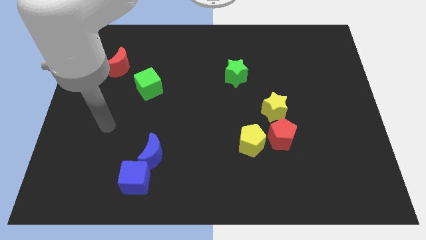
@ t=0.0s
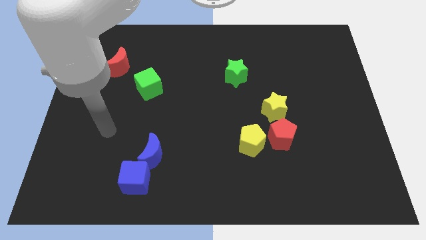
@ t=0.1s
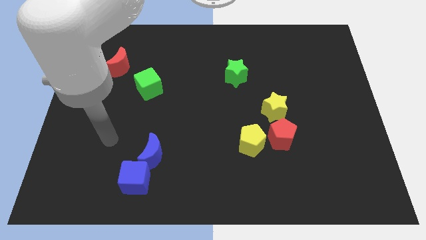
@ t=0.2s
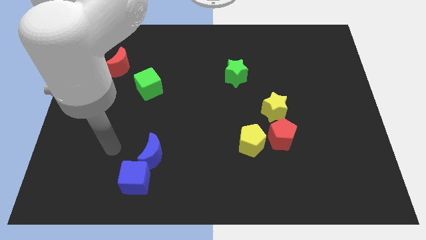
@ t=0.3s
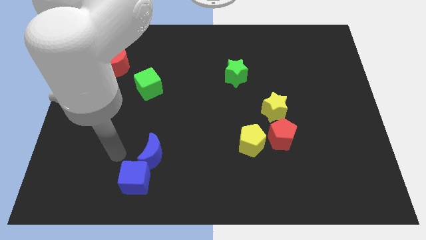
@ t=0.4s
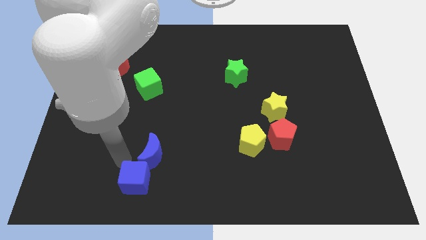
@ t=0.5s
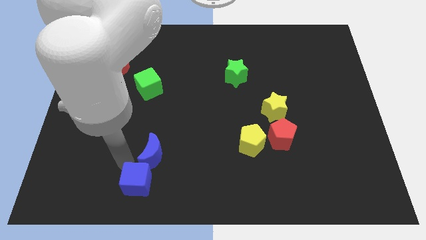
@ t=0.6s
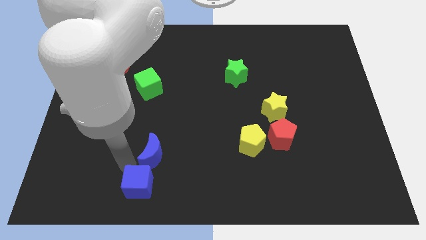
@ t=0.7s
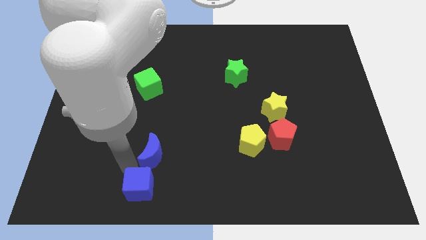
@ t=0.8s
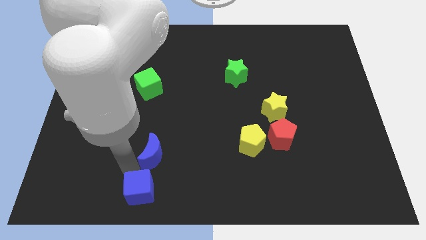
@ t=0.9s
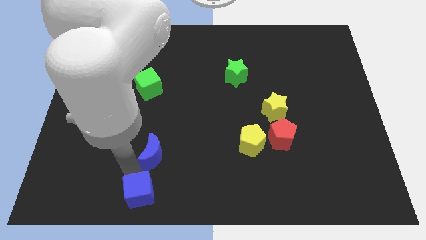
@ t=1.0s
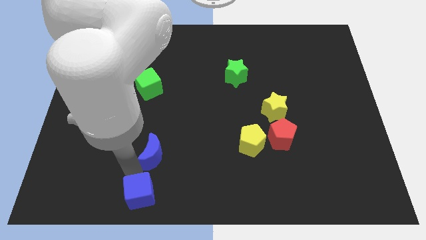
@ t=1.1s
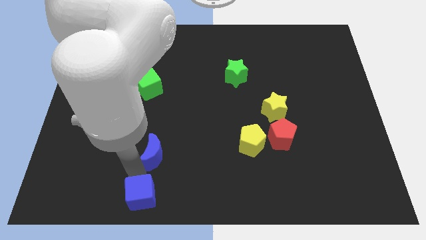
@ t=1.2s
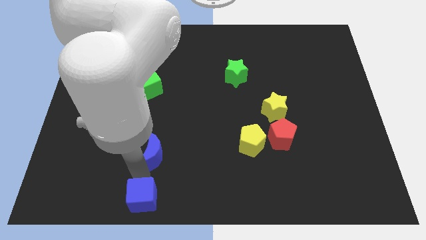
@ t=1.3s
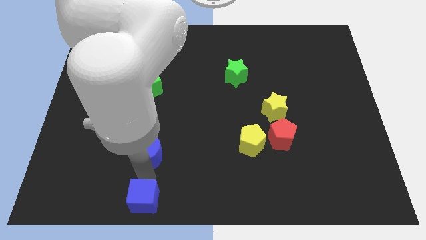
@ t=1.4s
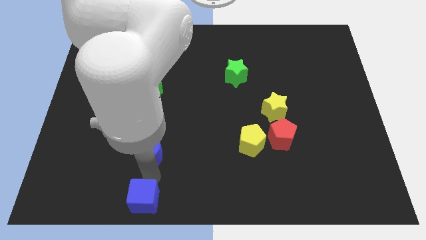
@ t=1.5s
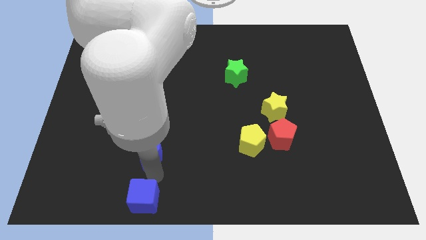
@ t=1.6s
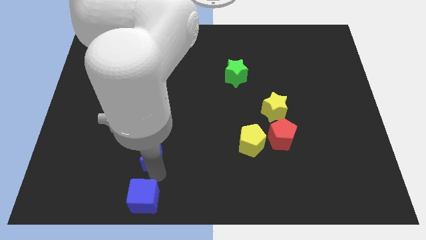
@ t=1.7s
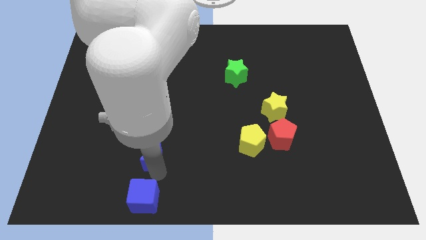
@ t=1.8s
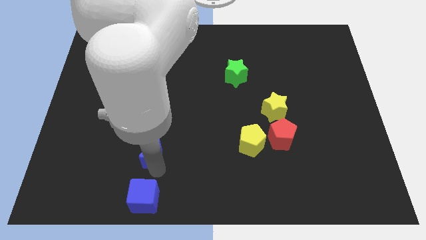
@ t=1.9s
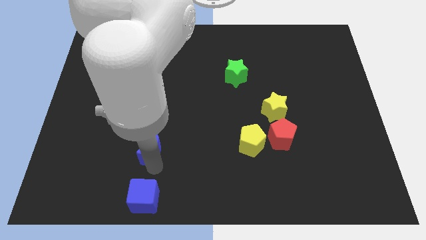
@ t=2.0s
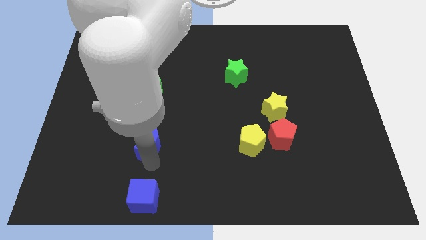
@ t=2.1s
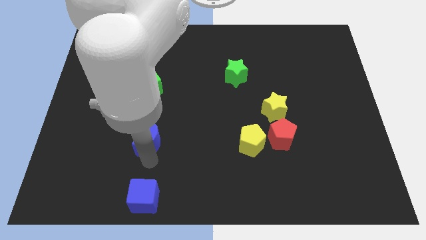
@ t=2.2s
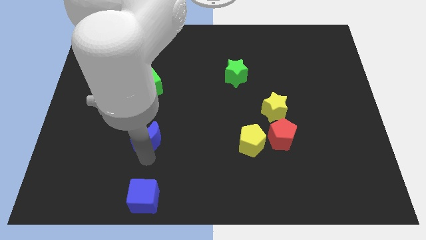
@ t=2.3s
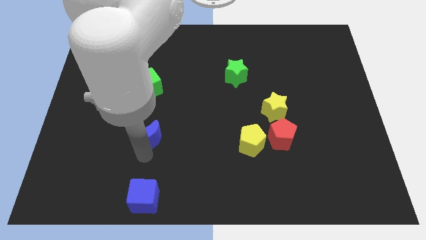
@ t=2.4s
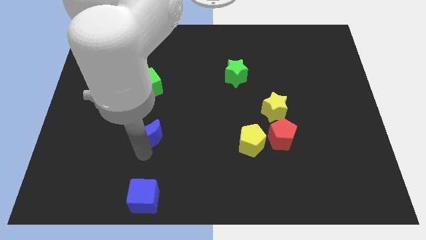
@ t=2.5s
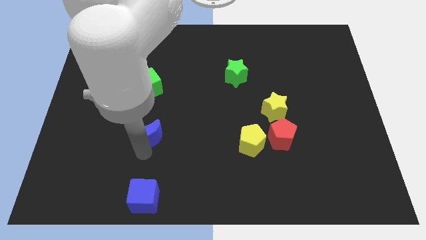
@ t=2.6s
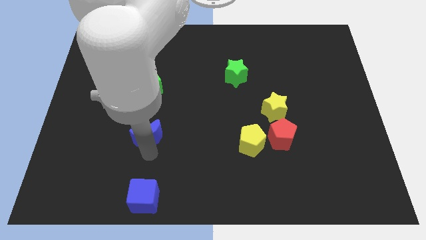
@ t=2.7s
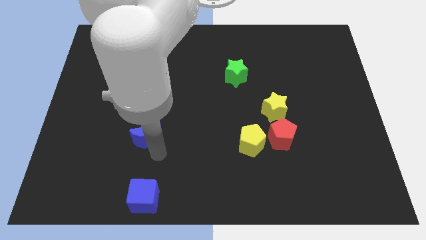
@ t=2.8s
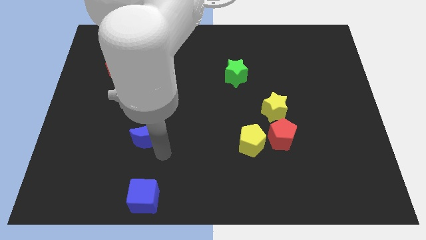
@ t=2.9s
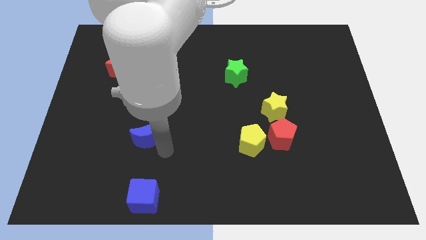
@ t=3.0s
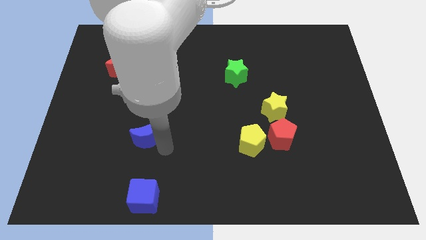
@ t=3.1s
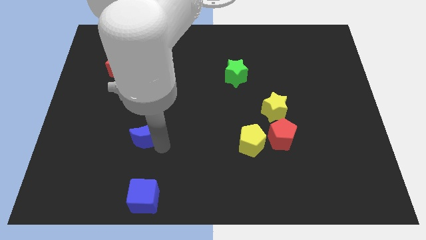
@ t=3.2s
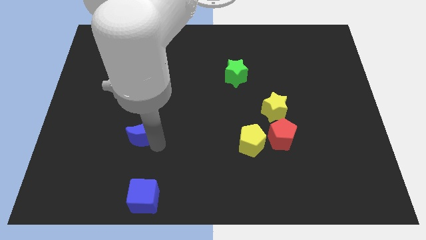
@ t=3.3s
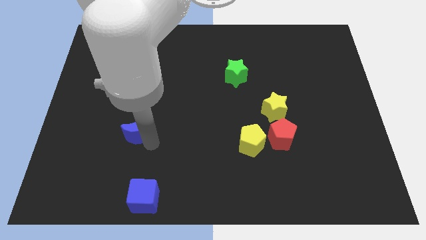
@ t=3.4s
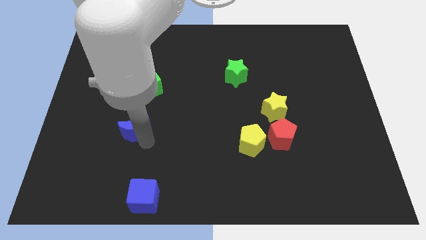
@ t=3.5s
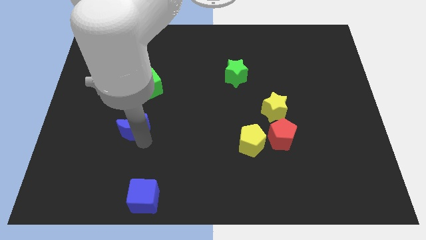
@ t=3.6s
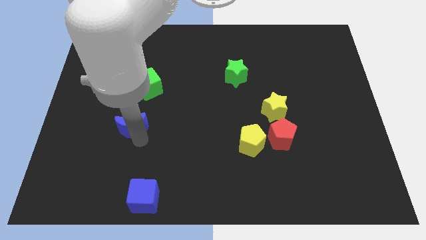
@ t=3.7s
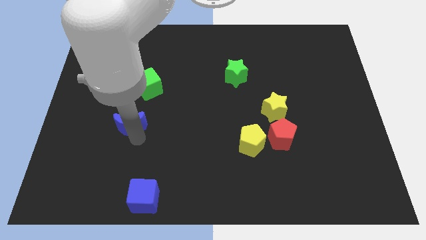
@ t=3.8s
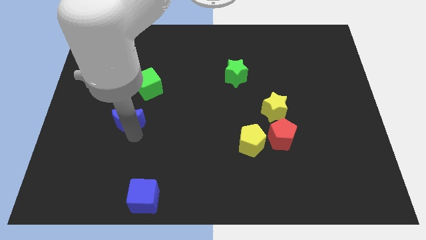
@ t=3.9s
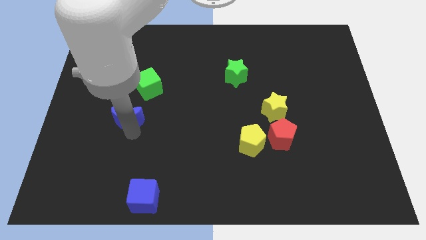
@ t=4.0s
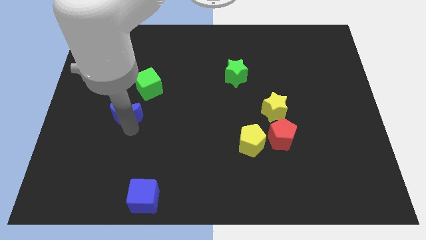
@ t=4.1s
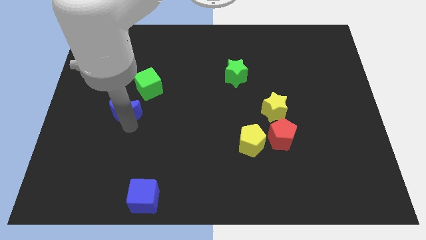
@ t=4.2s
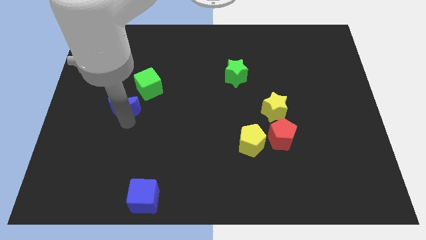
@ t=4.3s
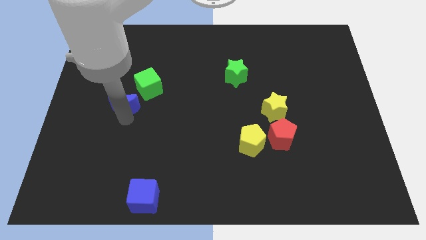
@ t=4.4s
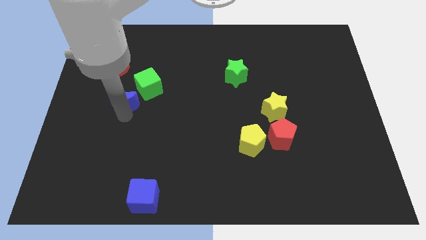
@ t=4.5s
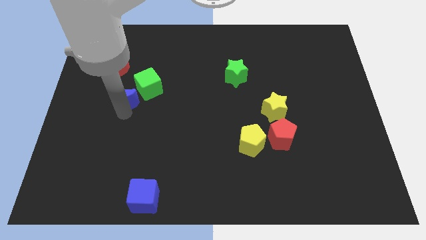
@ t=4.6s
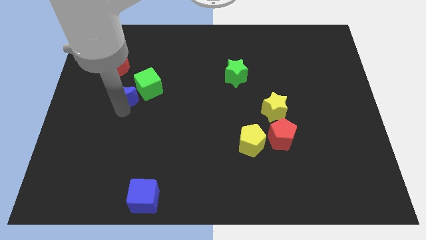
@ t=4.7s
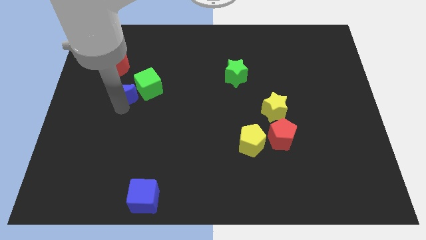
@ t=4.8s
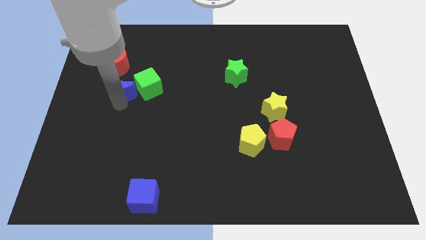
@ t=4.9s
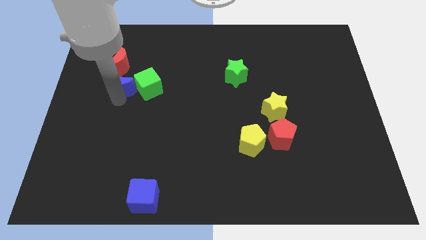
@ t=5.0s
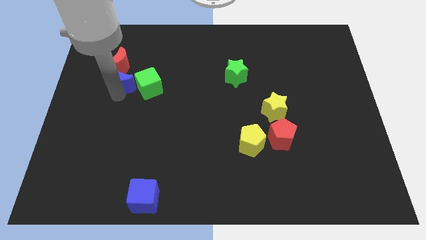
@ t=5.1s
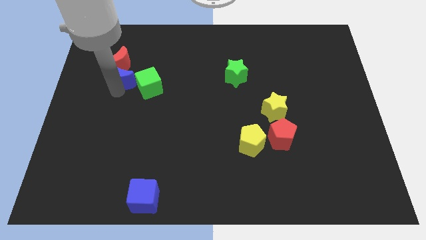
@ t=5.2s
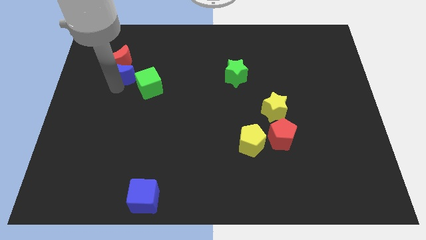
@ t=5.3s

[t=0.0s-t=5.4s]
move the blue moon to the red moon

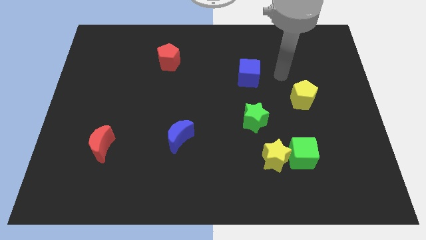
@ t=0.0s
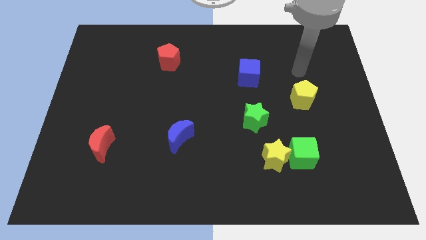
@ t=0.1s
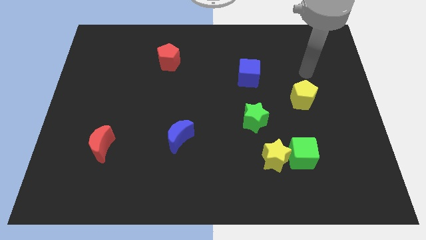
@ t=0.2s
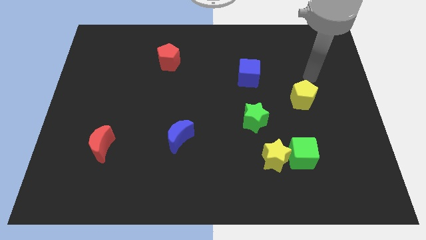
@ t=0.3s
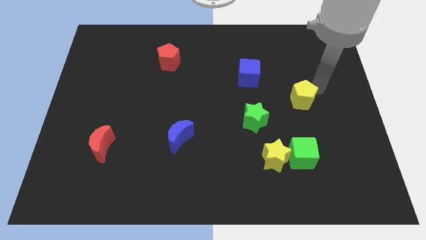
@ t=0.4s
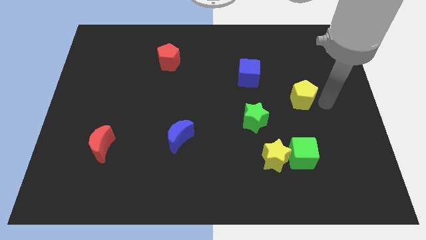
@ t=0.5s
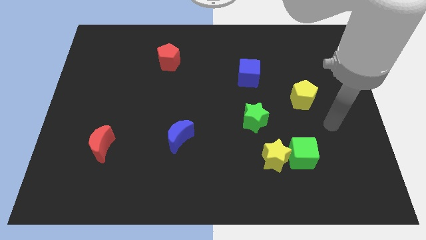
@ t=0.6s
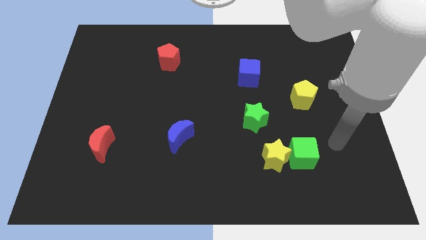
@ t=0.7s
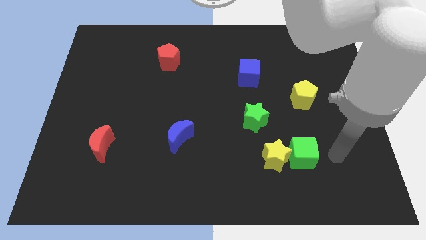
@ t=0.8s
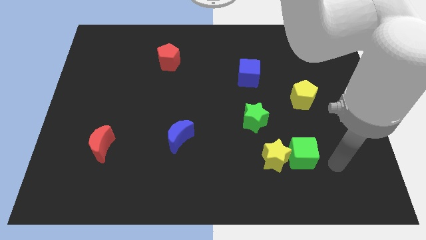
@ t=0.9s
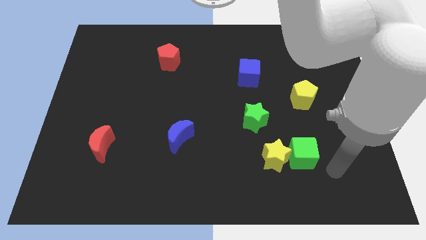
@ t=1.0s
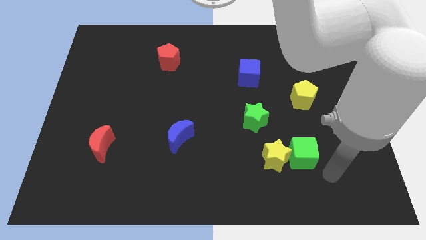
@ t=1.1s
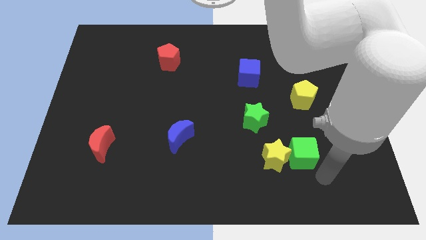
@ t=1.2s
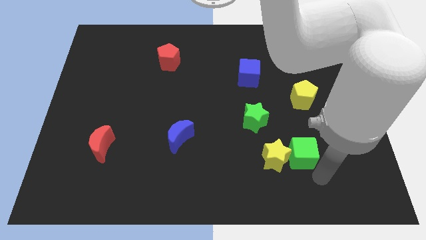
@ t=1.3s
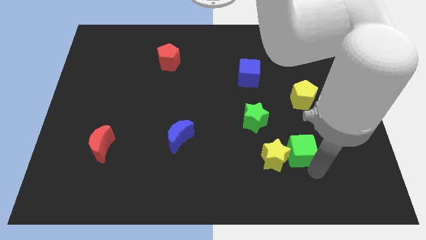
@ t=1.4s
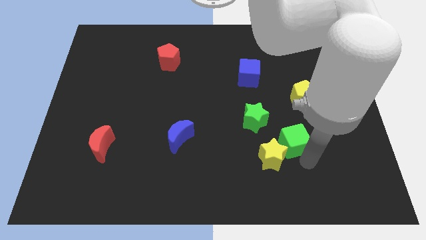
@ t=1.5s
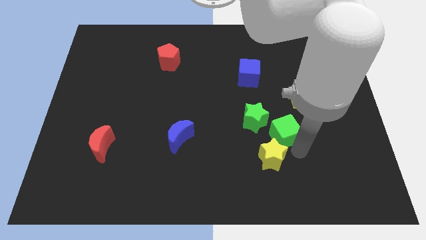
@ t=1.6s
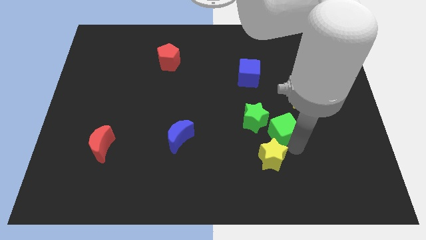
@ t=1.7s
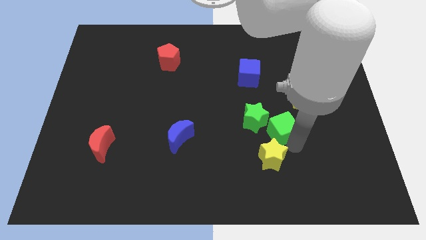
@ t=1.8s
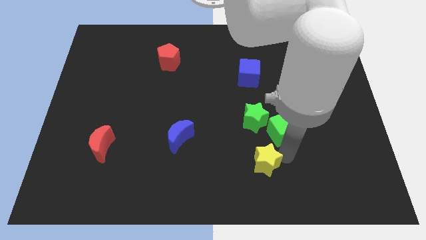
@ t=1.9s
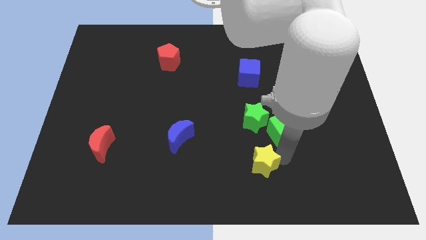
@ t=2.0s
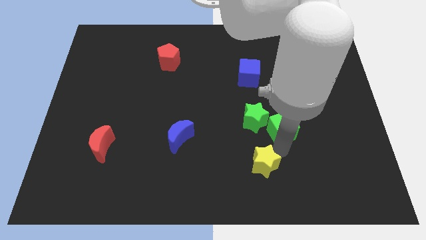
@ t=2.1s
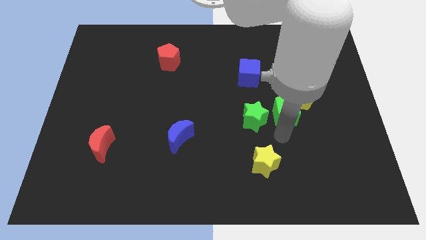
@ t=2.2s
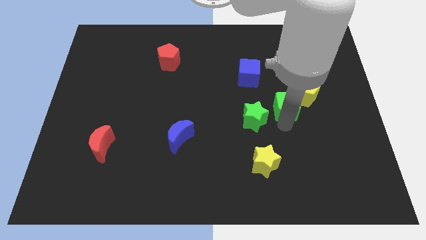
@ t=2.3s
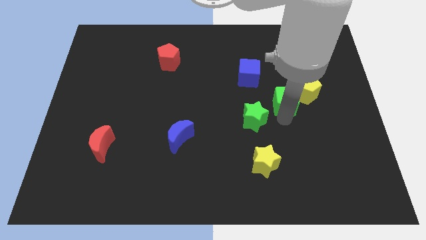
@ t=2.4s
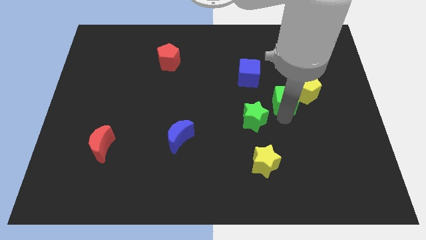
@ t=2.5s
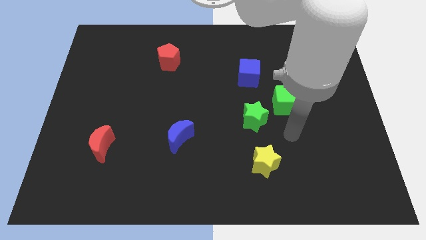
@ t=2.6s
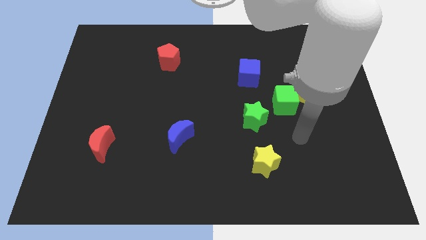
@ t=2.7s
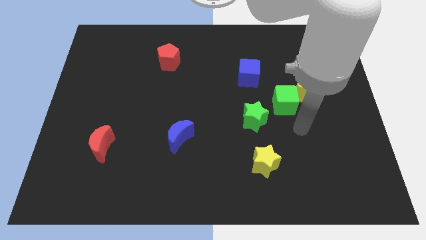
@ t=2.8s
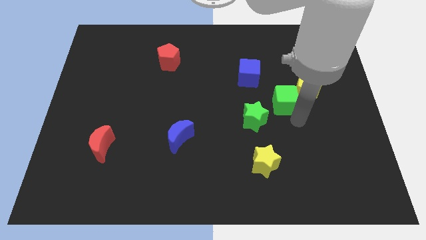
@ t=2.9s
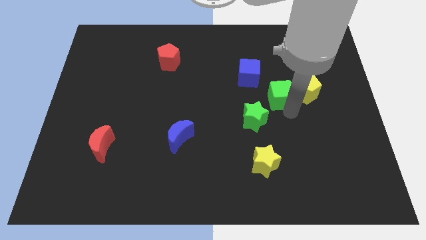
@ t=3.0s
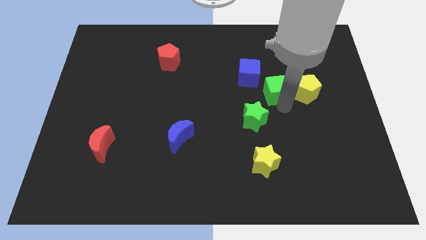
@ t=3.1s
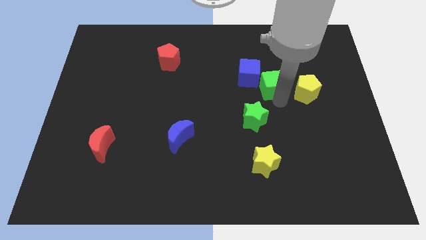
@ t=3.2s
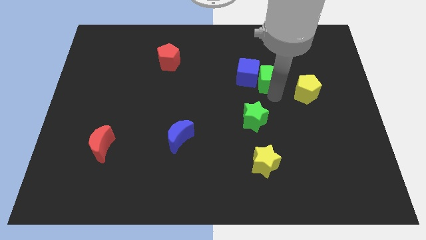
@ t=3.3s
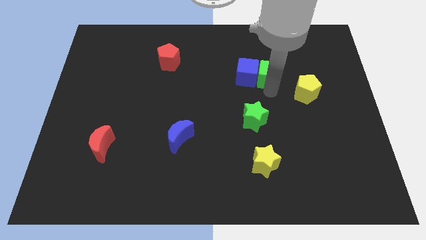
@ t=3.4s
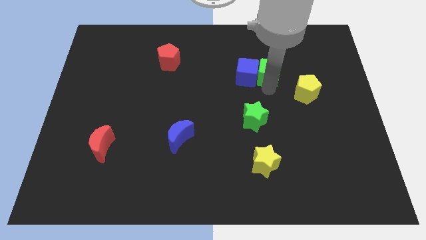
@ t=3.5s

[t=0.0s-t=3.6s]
put the green cube to the blue cube
